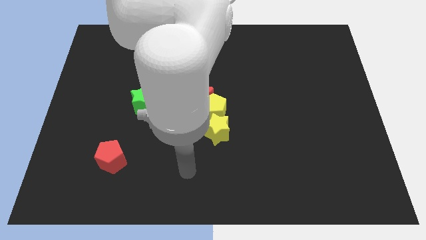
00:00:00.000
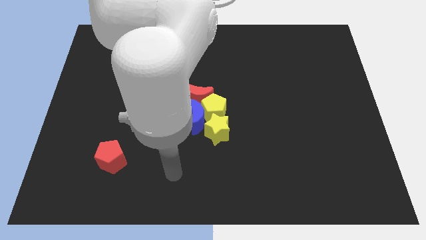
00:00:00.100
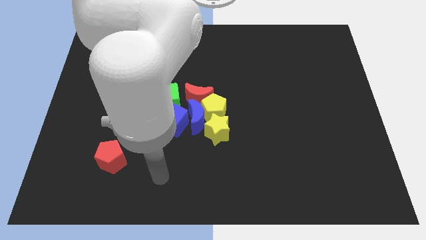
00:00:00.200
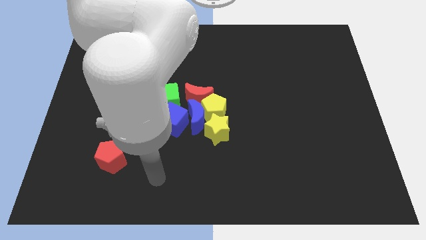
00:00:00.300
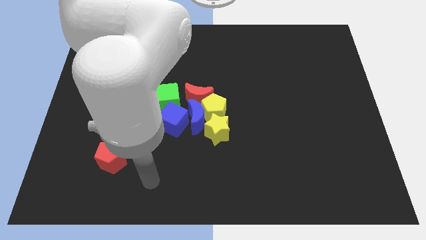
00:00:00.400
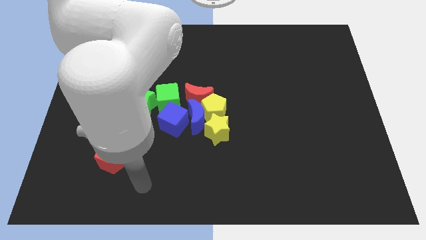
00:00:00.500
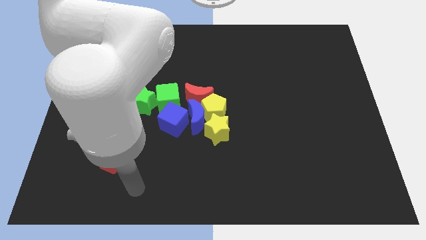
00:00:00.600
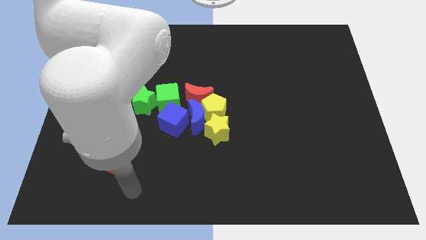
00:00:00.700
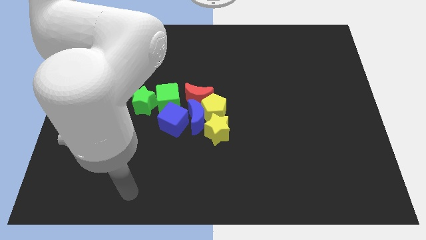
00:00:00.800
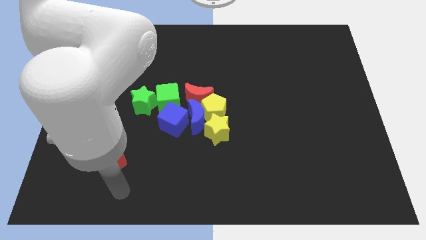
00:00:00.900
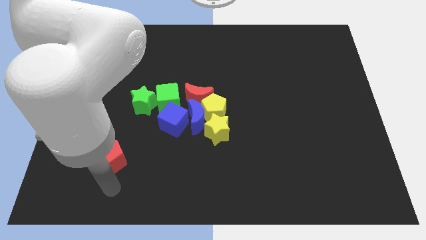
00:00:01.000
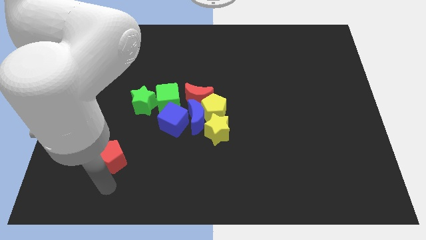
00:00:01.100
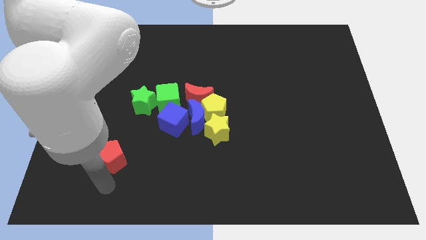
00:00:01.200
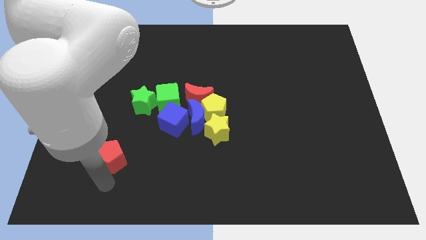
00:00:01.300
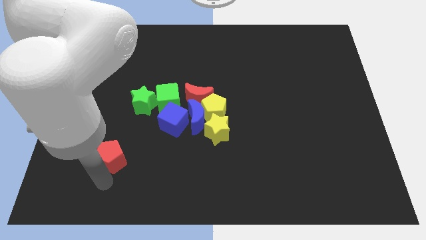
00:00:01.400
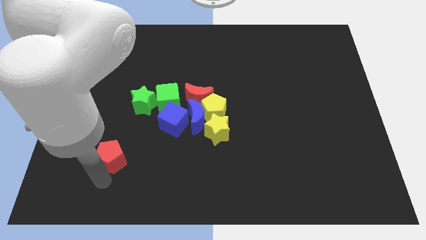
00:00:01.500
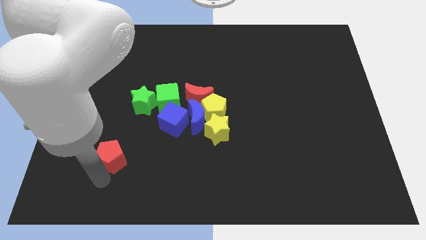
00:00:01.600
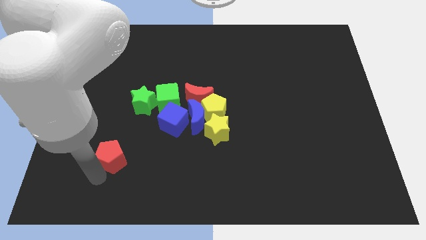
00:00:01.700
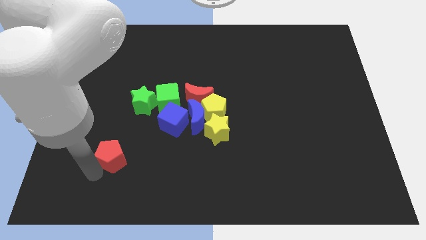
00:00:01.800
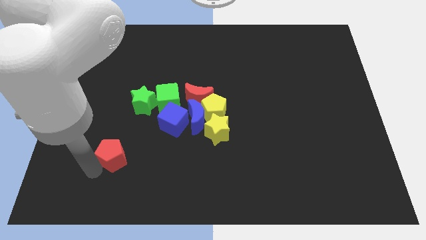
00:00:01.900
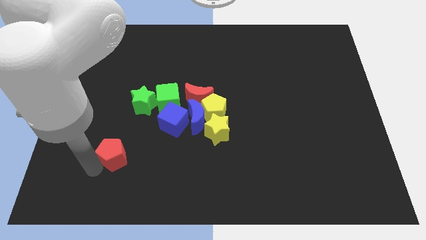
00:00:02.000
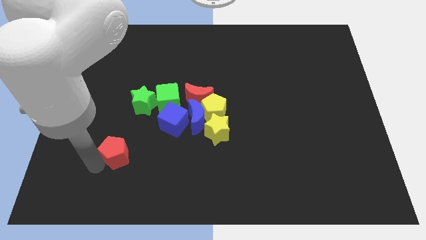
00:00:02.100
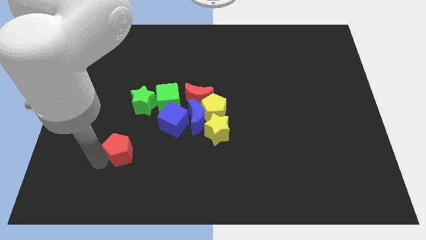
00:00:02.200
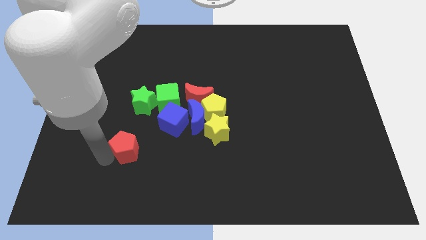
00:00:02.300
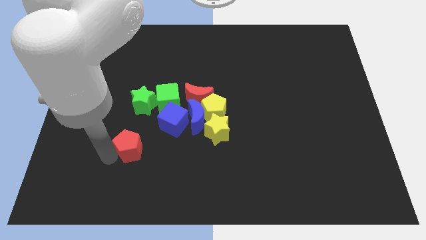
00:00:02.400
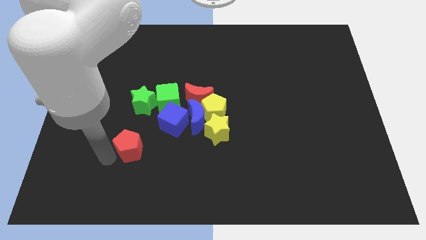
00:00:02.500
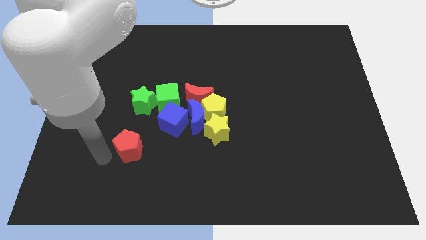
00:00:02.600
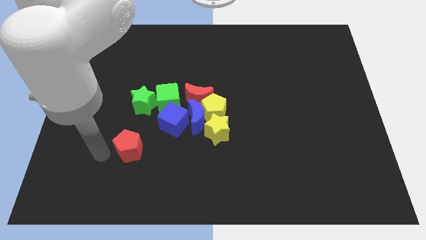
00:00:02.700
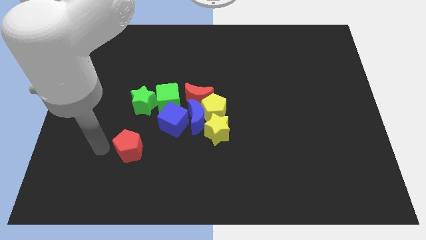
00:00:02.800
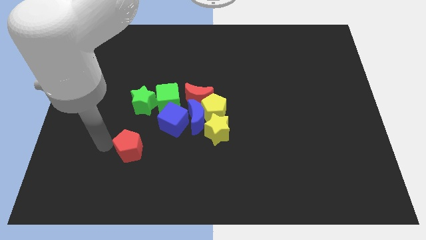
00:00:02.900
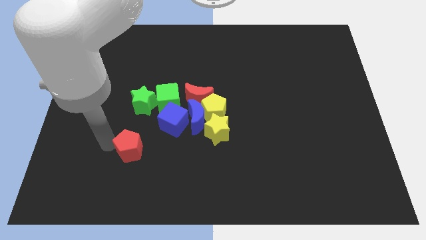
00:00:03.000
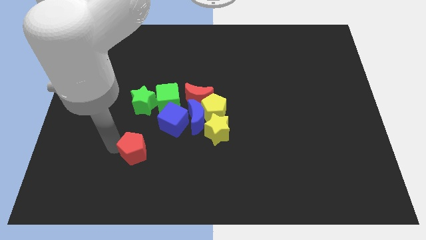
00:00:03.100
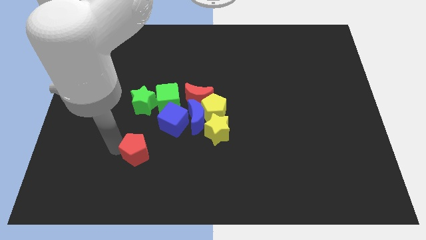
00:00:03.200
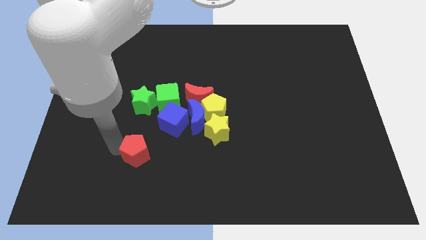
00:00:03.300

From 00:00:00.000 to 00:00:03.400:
slide the red pentagon towards the diagonal bottom left of the blue cube

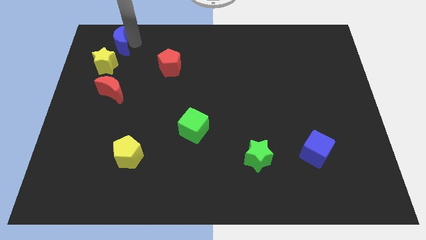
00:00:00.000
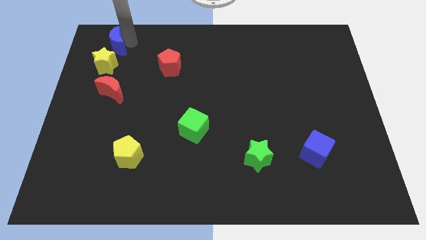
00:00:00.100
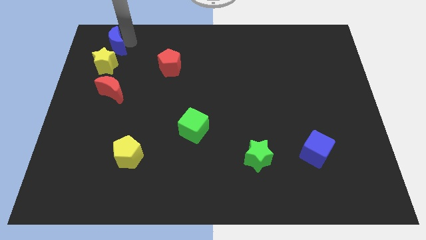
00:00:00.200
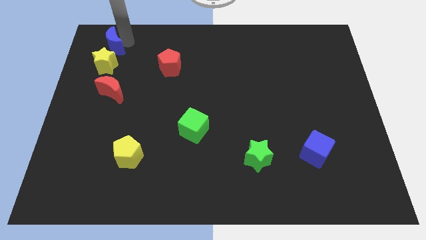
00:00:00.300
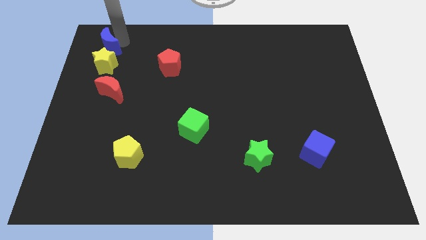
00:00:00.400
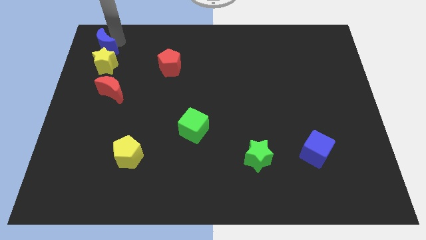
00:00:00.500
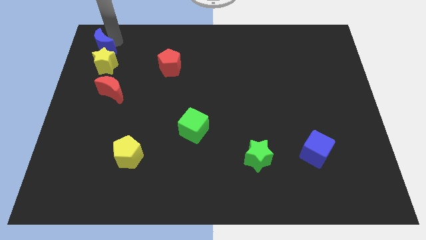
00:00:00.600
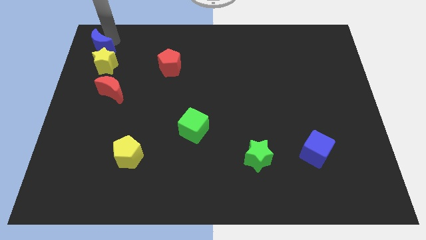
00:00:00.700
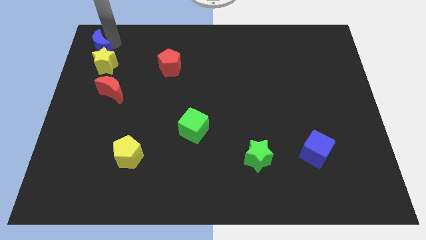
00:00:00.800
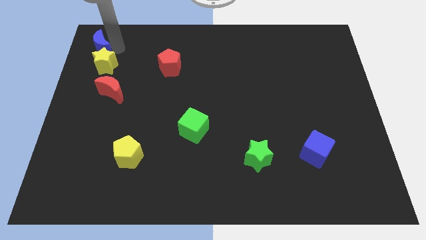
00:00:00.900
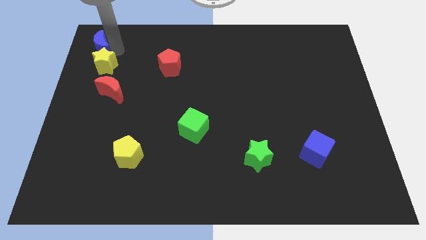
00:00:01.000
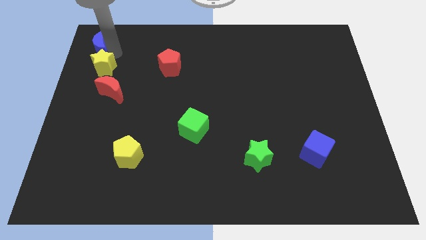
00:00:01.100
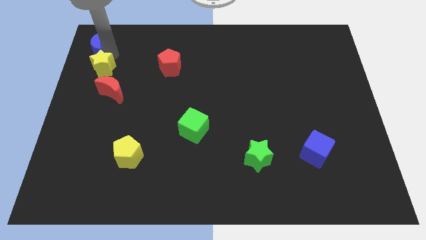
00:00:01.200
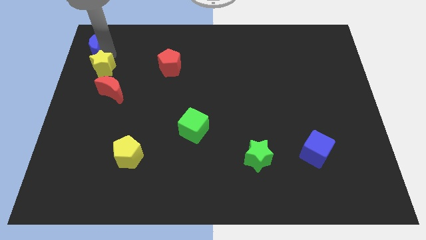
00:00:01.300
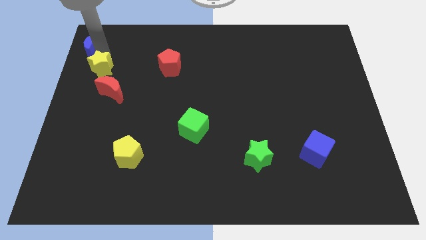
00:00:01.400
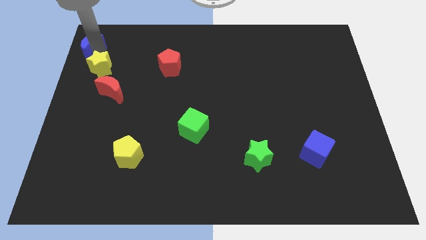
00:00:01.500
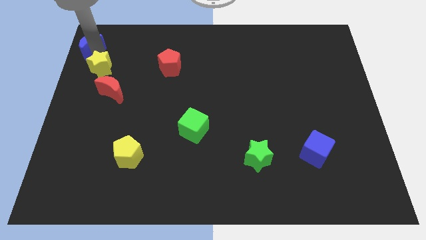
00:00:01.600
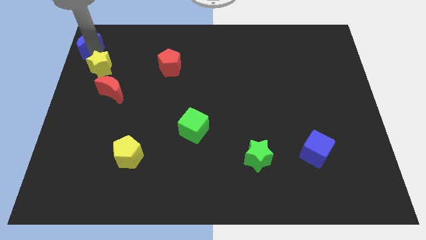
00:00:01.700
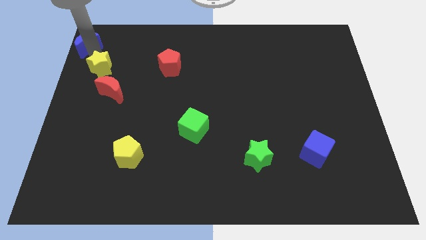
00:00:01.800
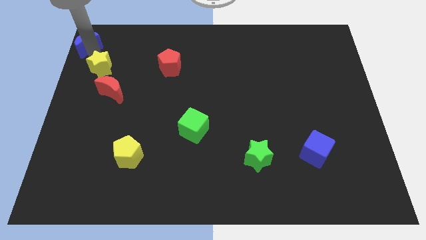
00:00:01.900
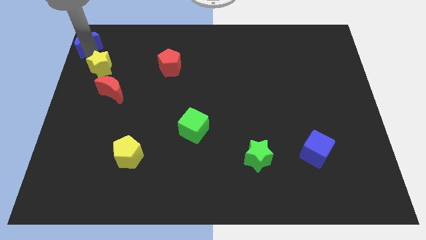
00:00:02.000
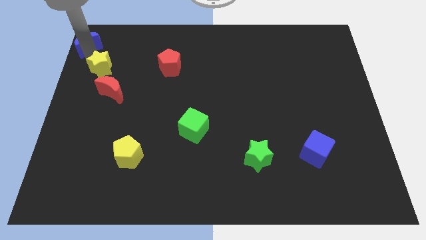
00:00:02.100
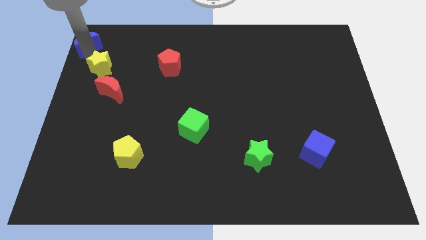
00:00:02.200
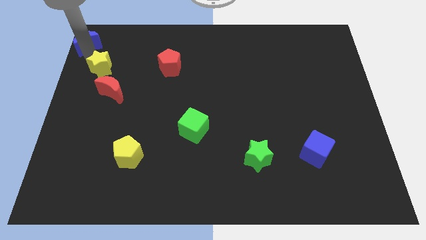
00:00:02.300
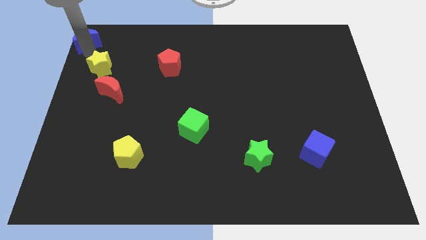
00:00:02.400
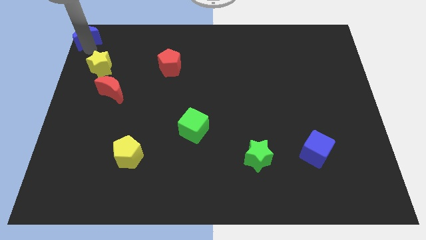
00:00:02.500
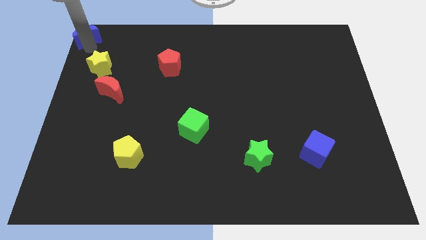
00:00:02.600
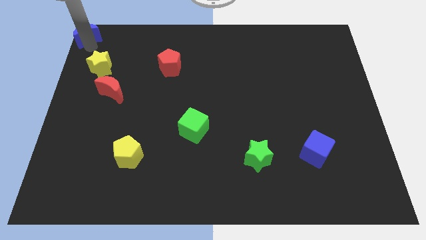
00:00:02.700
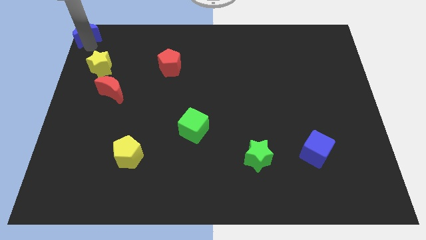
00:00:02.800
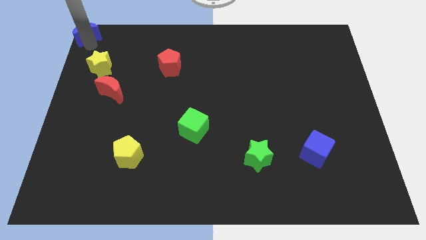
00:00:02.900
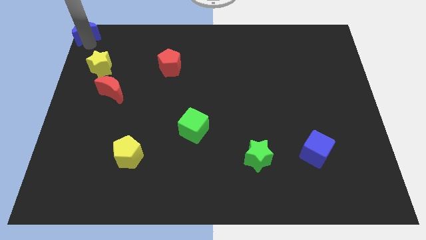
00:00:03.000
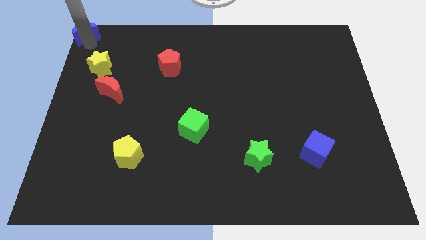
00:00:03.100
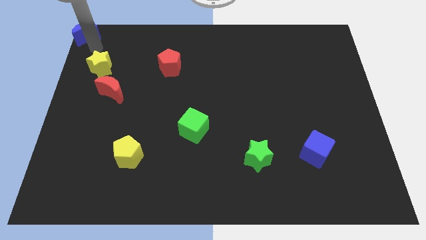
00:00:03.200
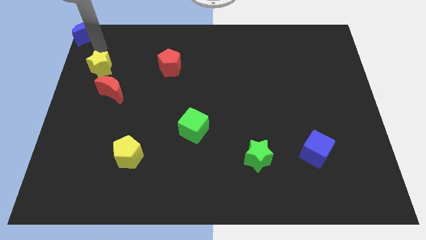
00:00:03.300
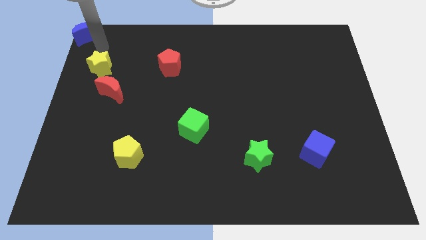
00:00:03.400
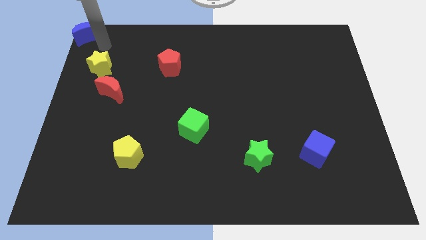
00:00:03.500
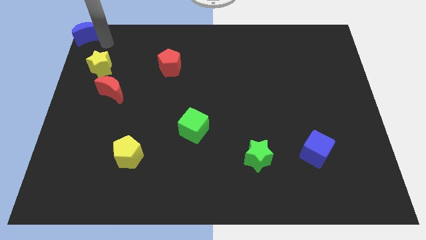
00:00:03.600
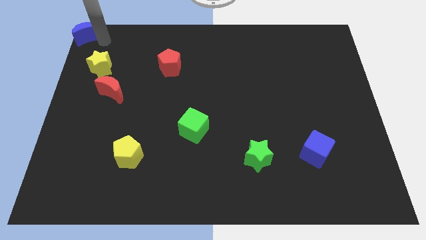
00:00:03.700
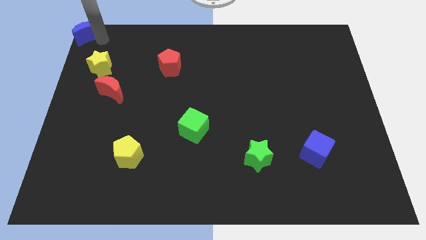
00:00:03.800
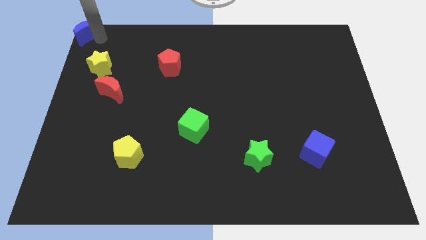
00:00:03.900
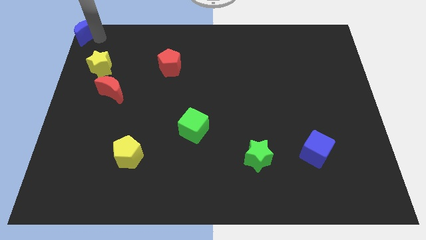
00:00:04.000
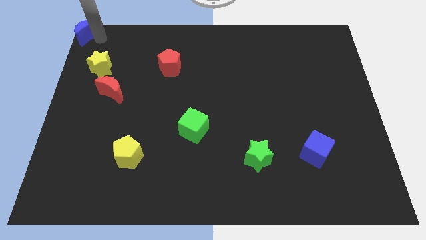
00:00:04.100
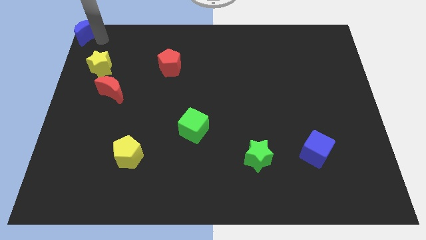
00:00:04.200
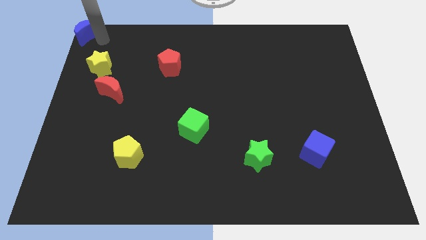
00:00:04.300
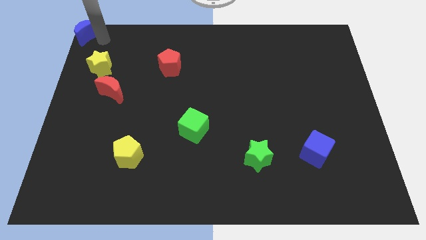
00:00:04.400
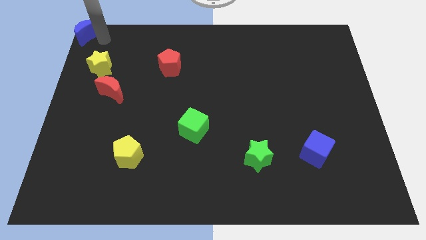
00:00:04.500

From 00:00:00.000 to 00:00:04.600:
place the blue moon at the top left corner of the board

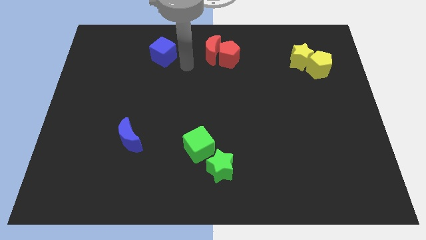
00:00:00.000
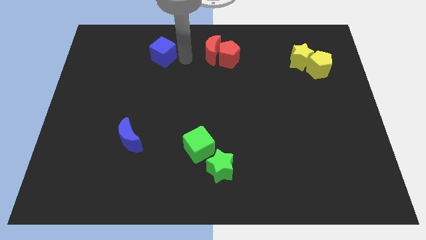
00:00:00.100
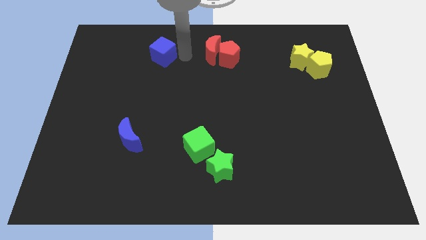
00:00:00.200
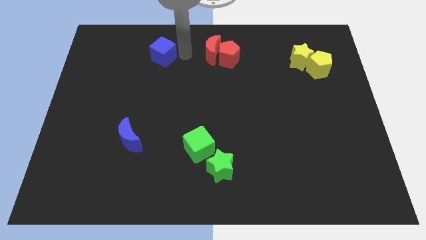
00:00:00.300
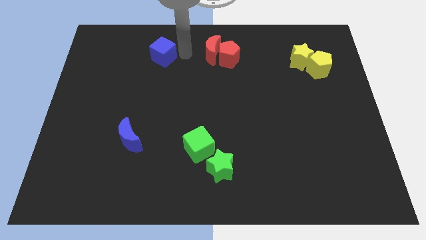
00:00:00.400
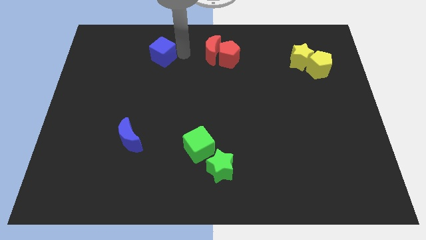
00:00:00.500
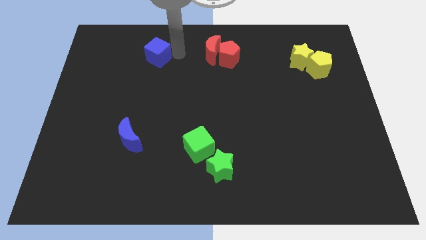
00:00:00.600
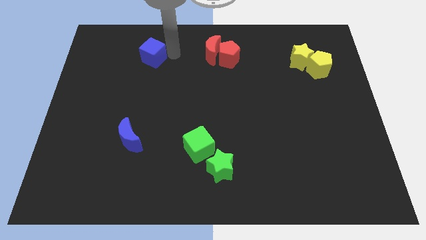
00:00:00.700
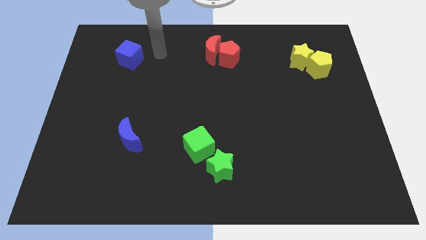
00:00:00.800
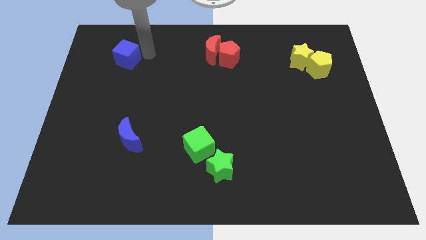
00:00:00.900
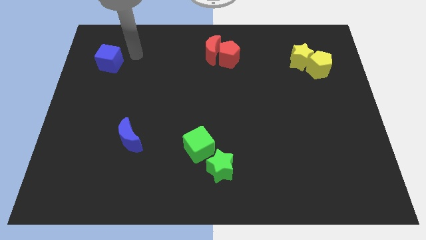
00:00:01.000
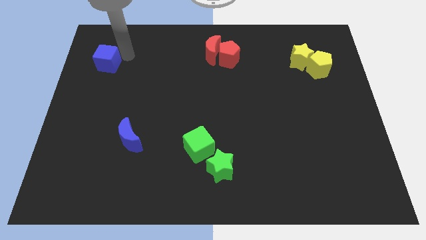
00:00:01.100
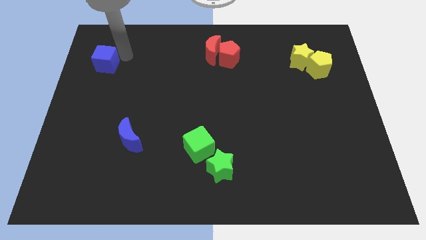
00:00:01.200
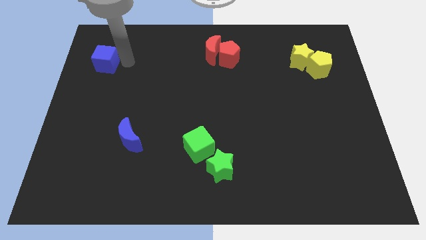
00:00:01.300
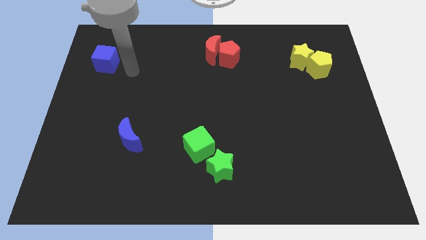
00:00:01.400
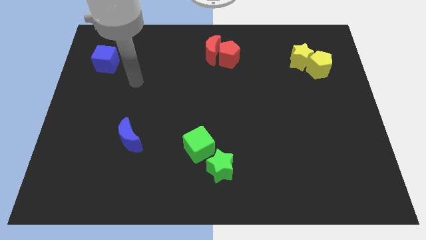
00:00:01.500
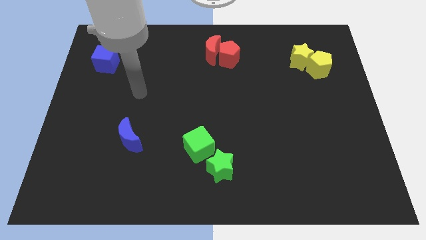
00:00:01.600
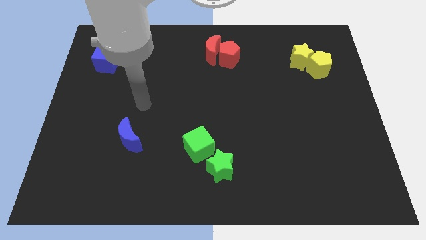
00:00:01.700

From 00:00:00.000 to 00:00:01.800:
move the blue cube towards the top left corner
